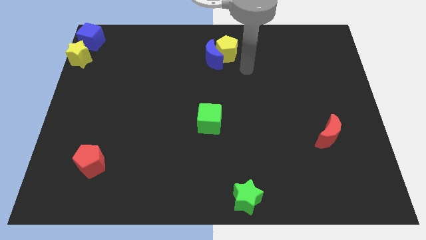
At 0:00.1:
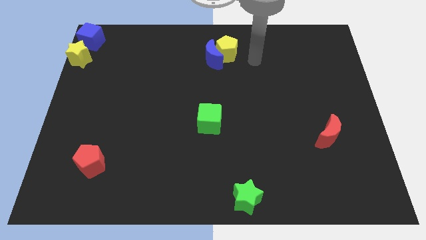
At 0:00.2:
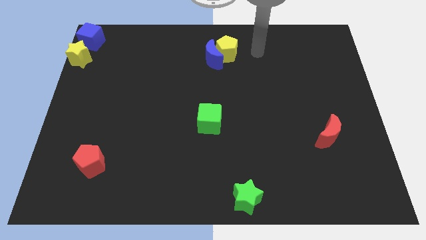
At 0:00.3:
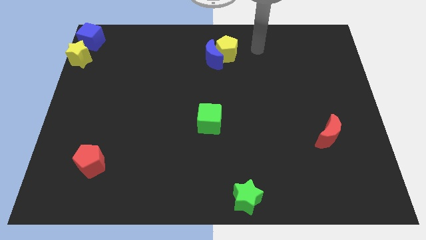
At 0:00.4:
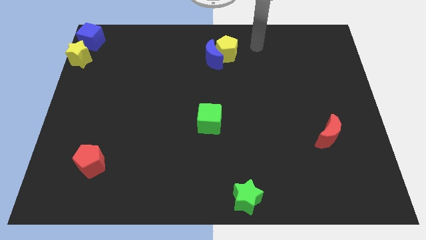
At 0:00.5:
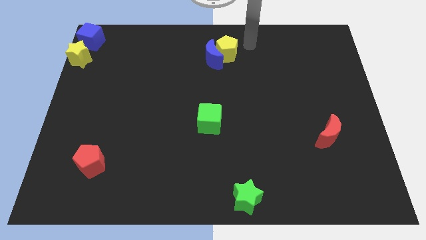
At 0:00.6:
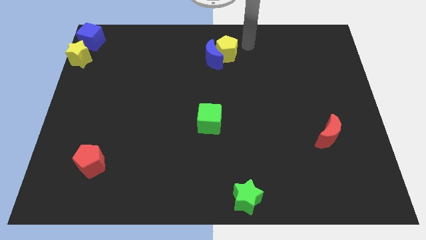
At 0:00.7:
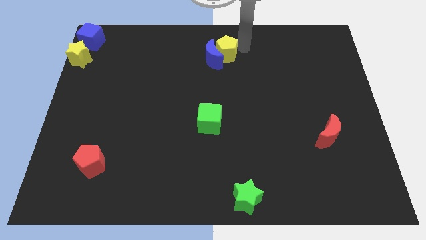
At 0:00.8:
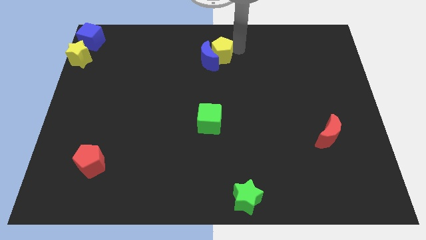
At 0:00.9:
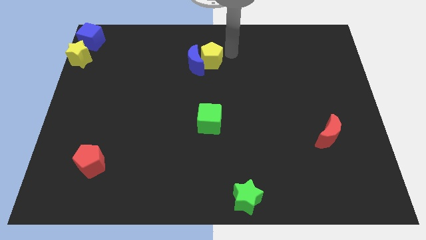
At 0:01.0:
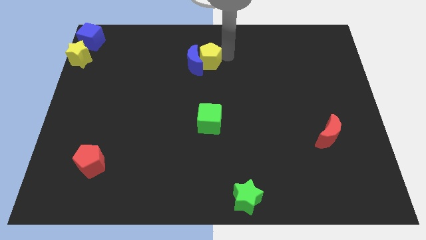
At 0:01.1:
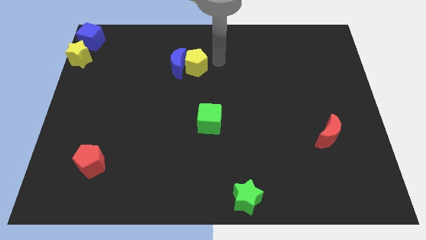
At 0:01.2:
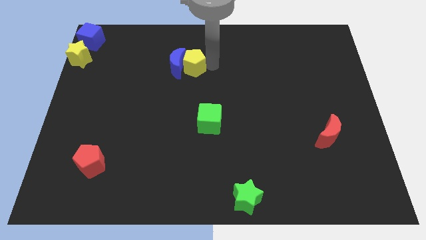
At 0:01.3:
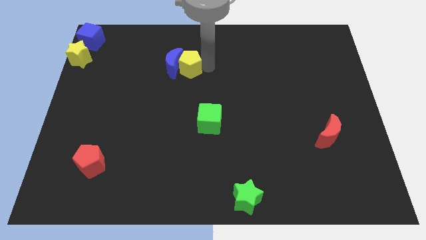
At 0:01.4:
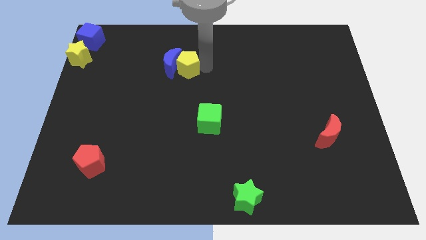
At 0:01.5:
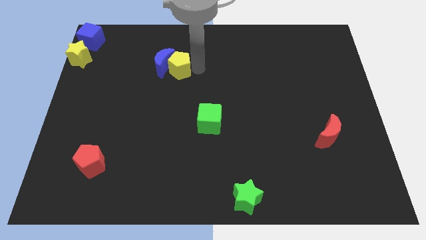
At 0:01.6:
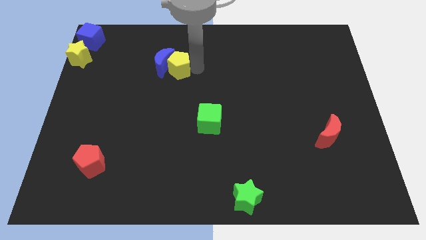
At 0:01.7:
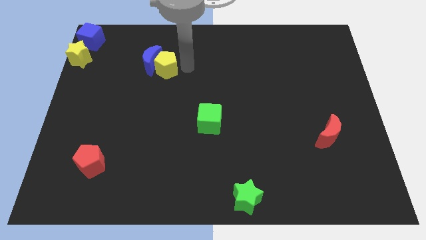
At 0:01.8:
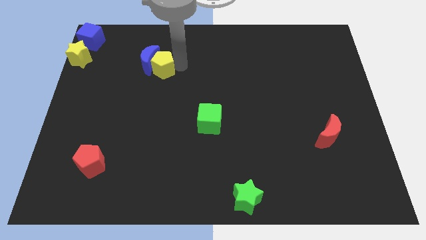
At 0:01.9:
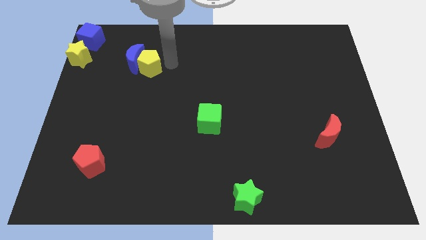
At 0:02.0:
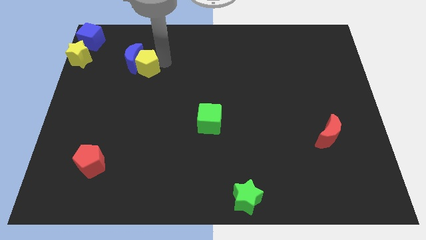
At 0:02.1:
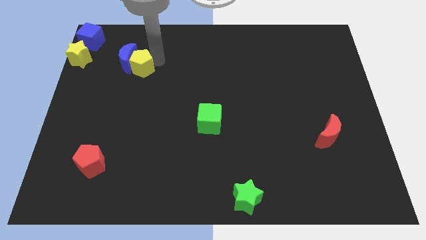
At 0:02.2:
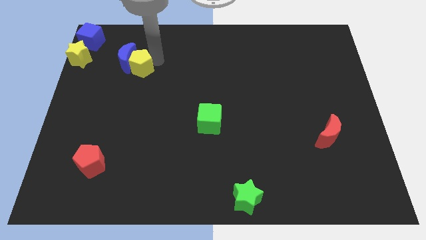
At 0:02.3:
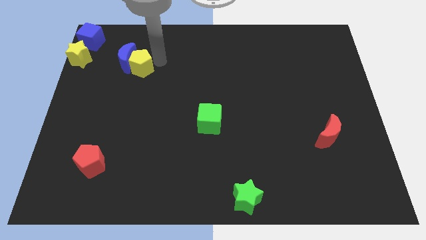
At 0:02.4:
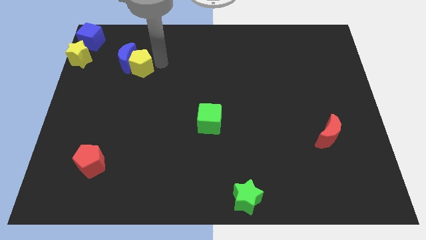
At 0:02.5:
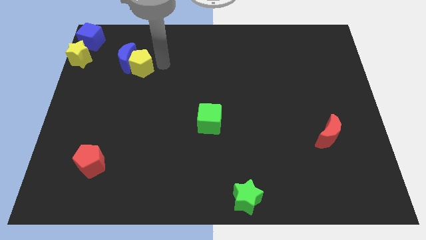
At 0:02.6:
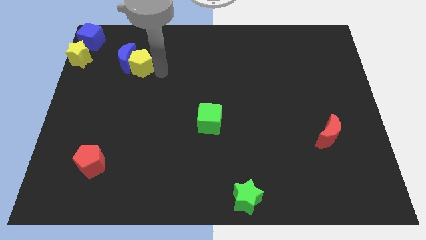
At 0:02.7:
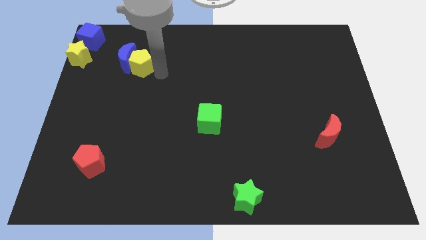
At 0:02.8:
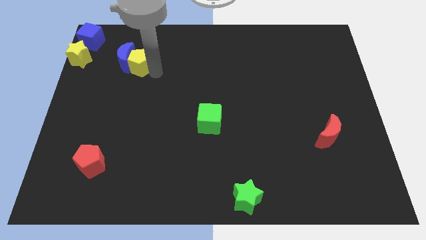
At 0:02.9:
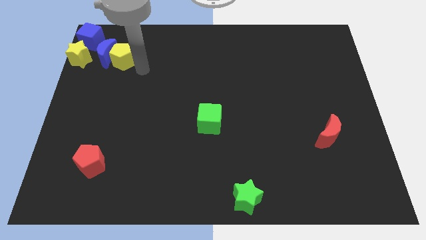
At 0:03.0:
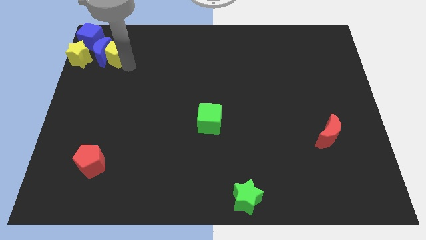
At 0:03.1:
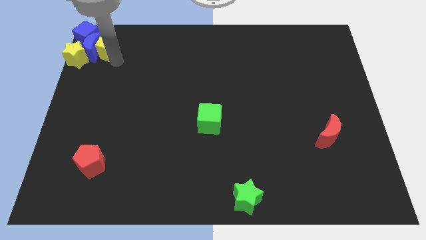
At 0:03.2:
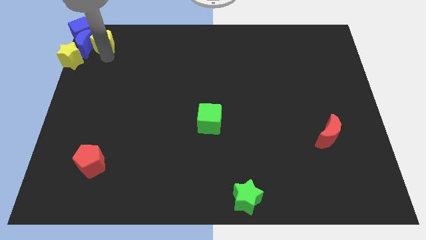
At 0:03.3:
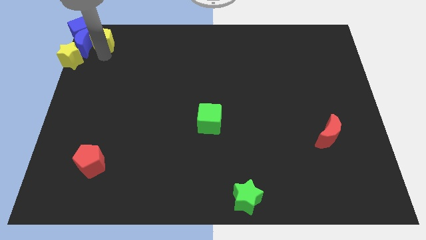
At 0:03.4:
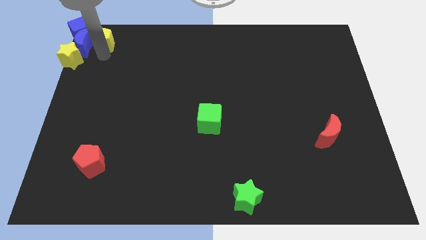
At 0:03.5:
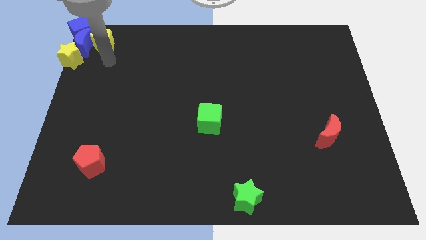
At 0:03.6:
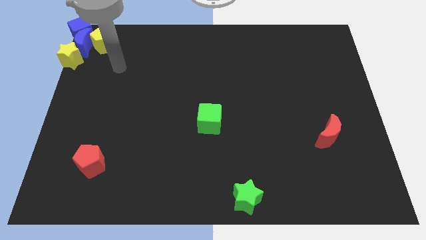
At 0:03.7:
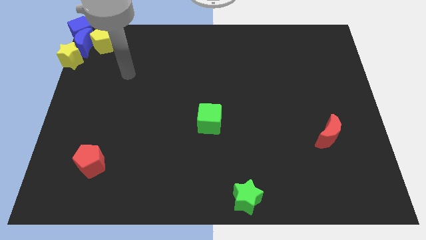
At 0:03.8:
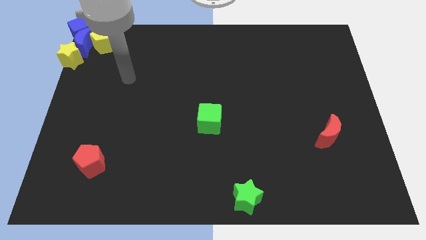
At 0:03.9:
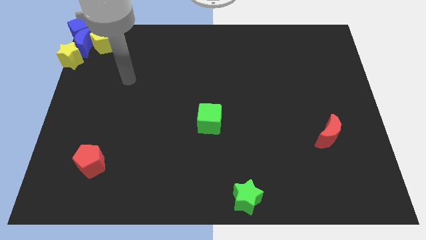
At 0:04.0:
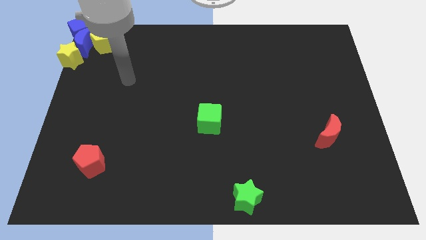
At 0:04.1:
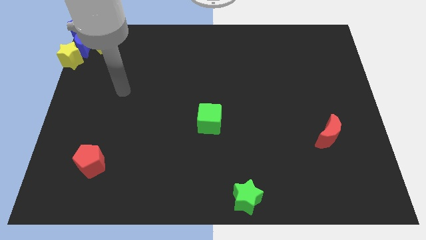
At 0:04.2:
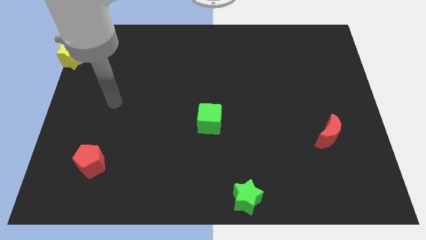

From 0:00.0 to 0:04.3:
push the blue crescent and yellow pentagon to the top left side of the board

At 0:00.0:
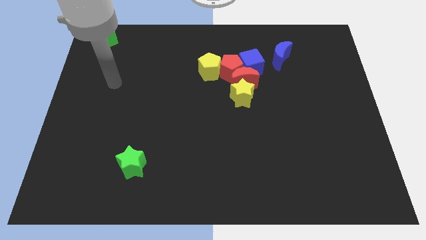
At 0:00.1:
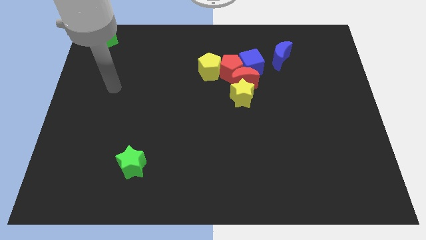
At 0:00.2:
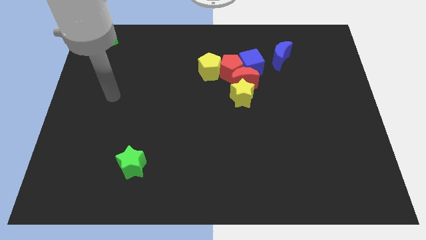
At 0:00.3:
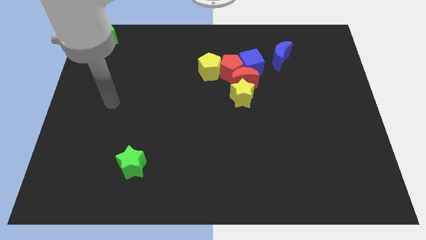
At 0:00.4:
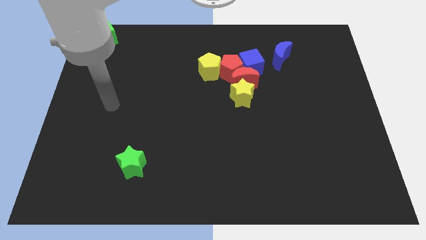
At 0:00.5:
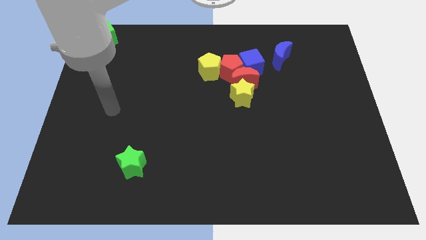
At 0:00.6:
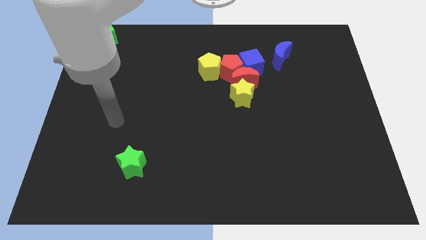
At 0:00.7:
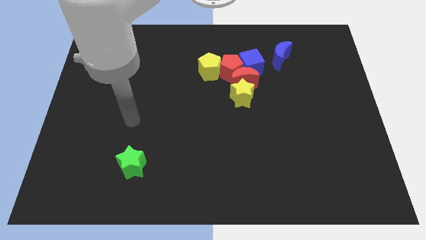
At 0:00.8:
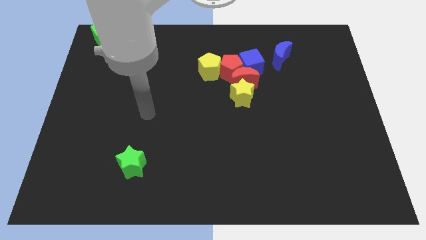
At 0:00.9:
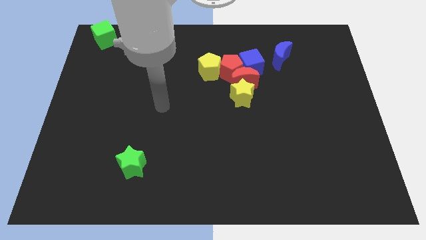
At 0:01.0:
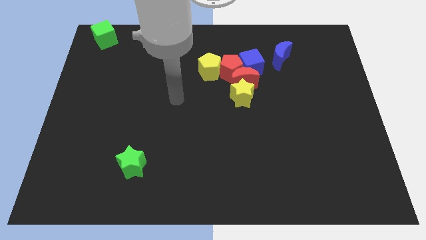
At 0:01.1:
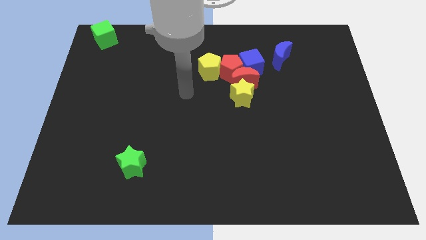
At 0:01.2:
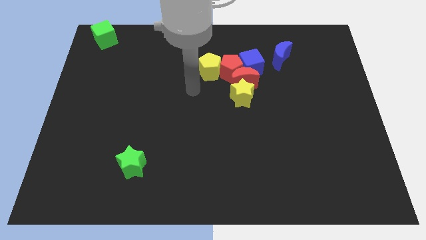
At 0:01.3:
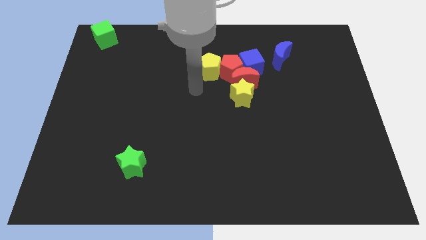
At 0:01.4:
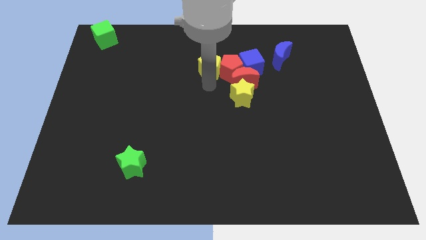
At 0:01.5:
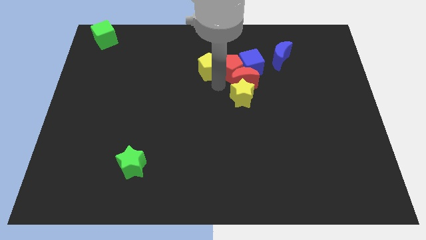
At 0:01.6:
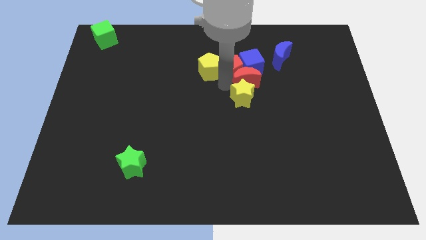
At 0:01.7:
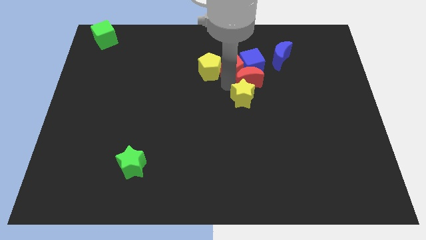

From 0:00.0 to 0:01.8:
touch the left side of the red crescent

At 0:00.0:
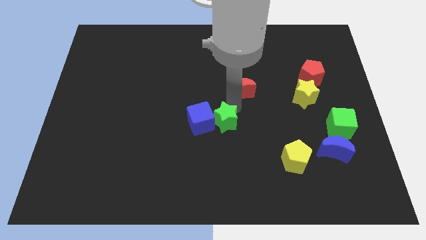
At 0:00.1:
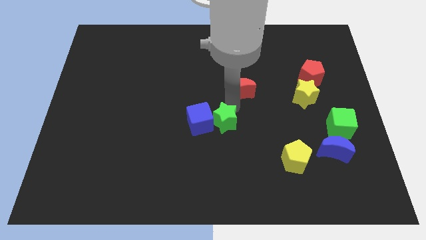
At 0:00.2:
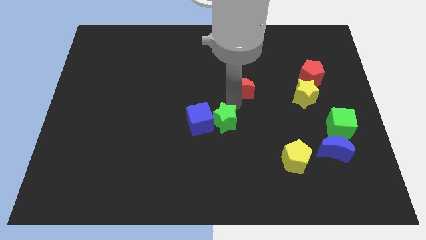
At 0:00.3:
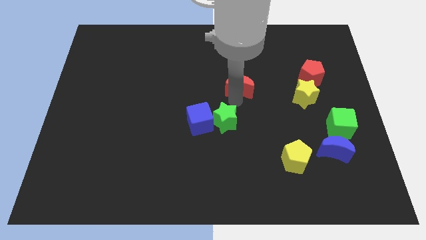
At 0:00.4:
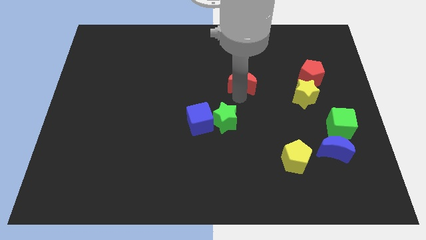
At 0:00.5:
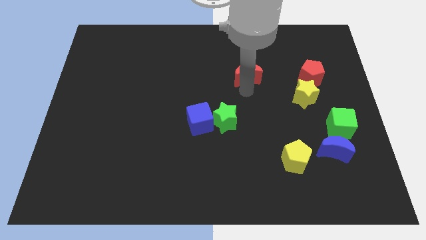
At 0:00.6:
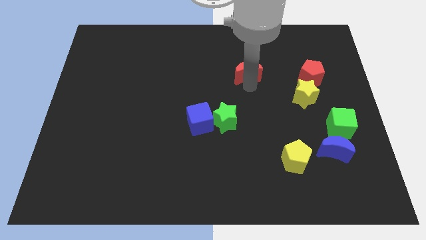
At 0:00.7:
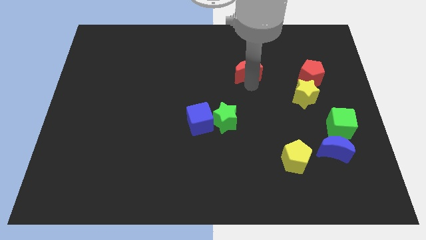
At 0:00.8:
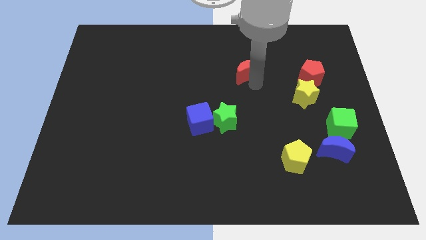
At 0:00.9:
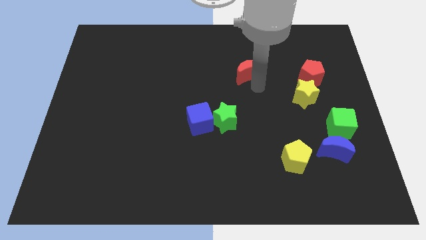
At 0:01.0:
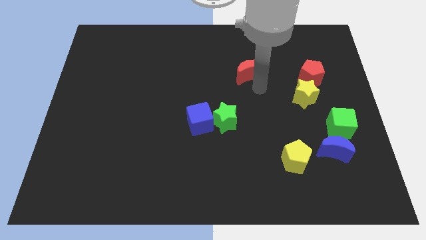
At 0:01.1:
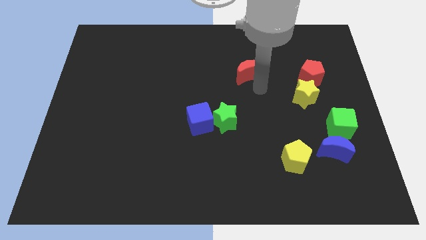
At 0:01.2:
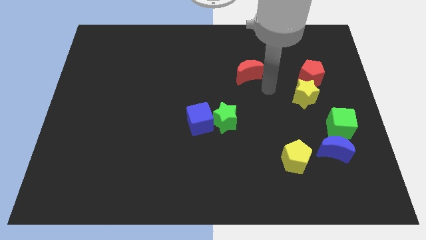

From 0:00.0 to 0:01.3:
slightly move the red moon up

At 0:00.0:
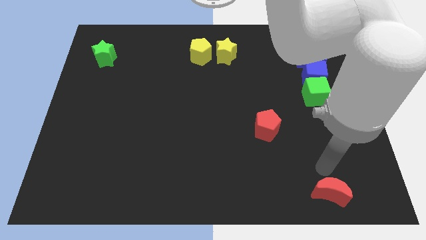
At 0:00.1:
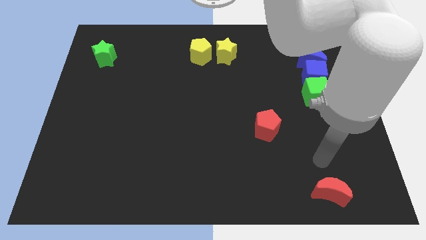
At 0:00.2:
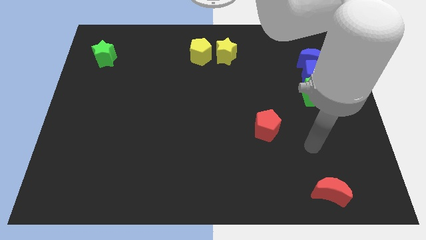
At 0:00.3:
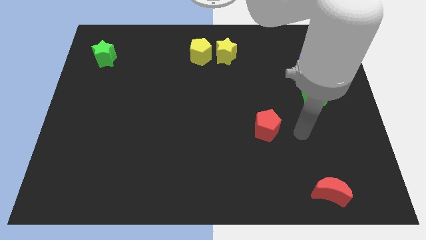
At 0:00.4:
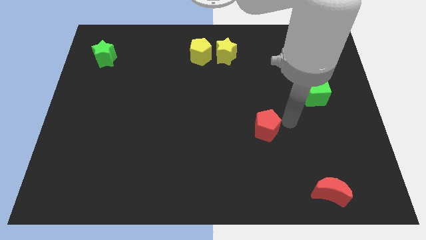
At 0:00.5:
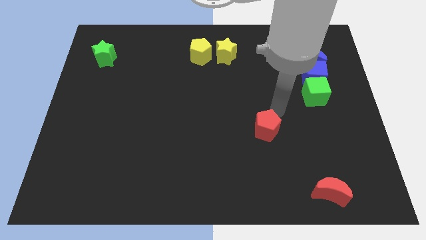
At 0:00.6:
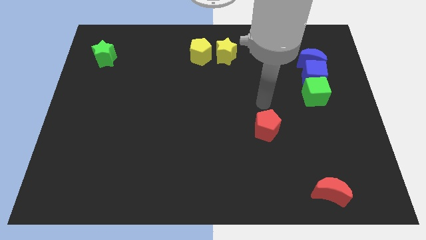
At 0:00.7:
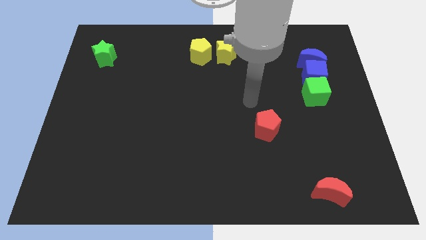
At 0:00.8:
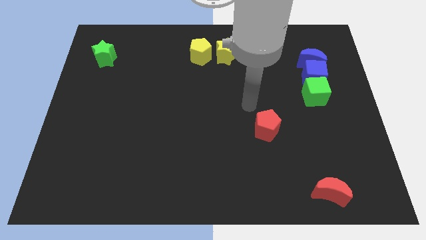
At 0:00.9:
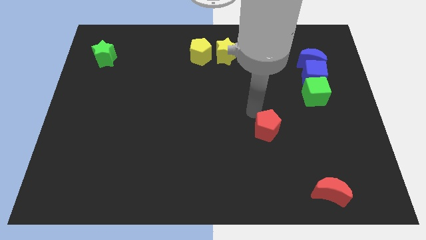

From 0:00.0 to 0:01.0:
move your arm towards the red pentagon

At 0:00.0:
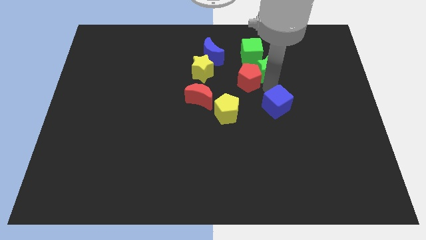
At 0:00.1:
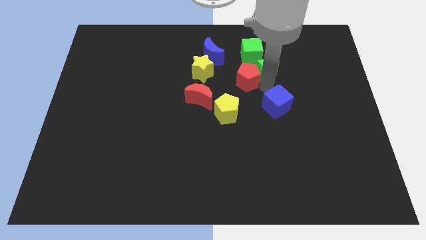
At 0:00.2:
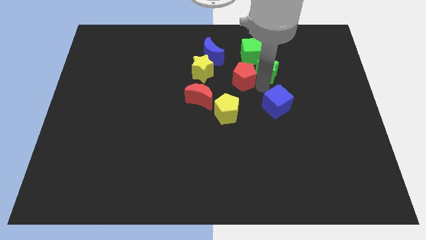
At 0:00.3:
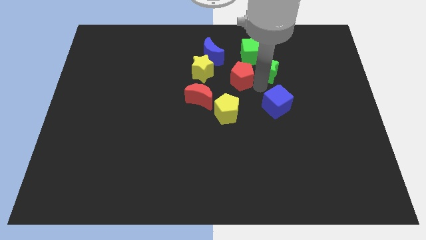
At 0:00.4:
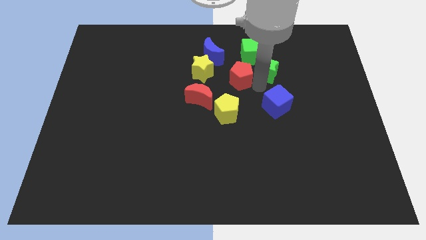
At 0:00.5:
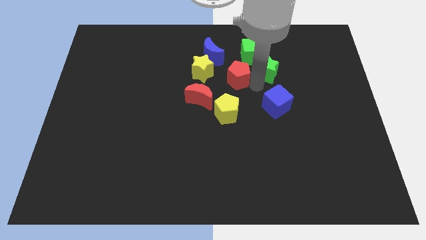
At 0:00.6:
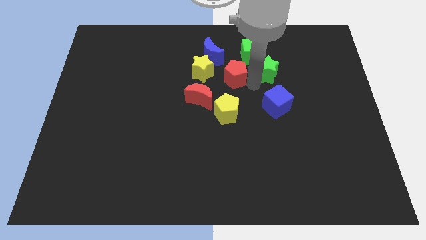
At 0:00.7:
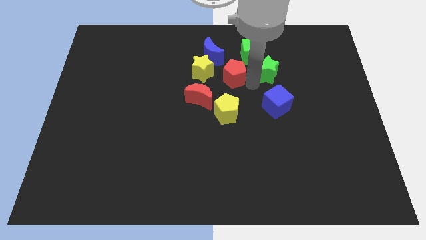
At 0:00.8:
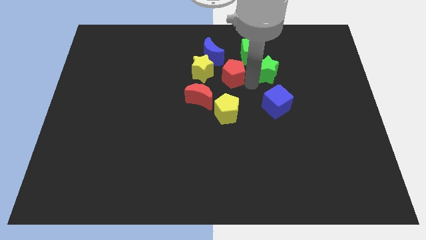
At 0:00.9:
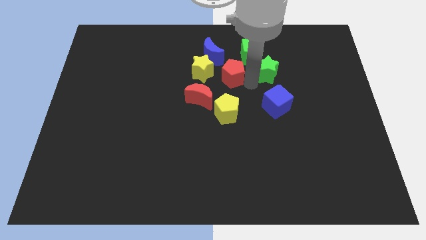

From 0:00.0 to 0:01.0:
move the red pentagon towards the right of the yellow star
